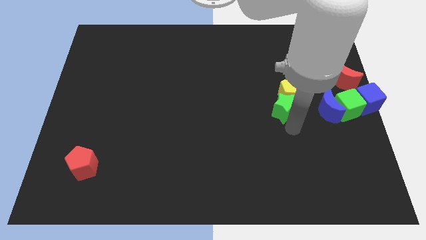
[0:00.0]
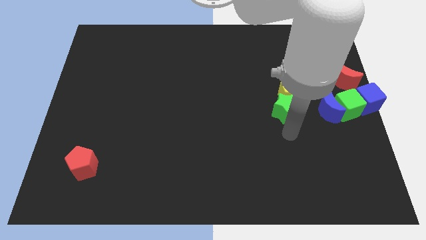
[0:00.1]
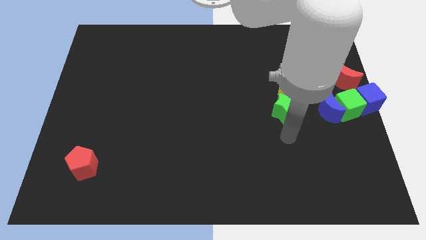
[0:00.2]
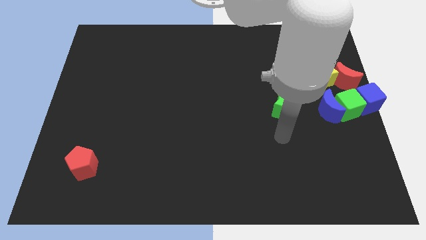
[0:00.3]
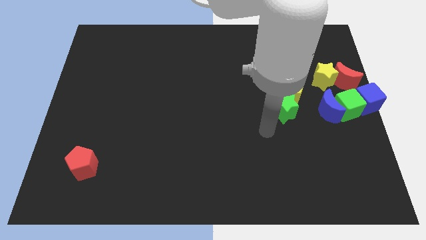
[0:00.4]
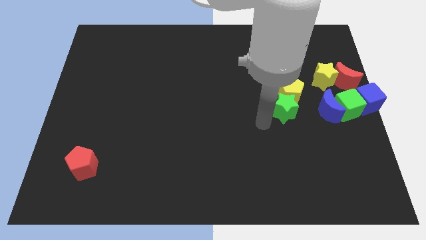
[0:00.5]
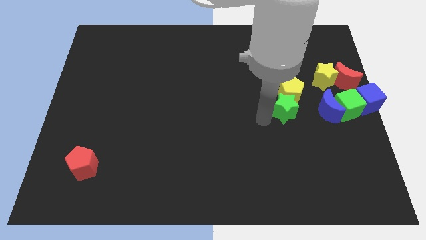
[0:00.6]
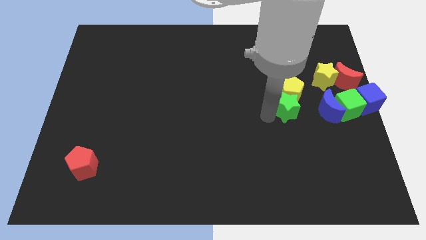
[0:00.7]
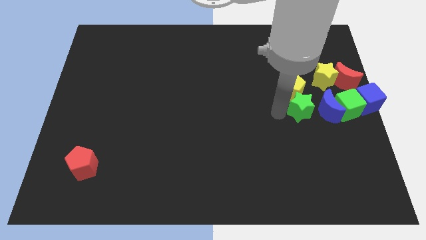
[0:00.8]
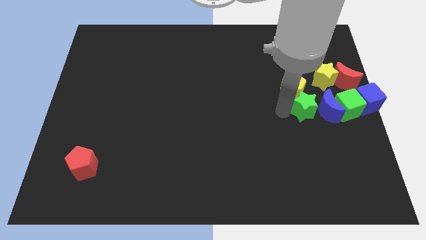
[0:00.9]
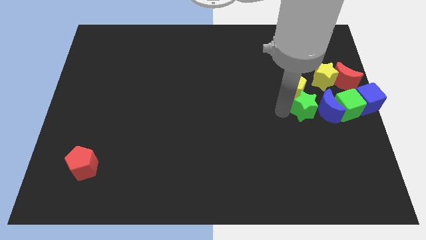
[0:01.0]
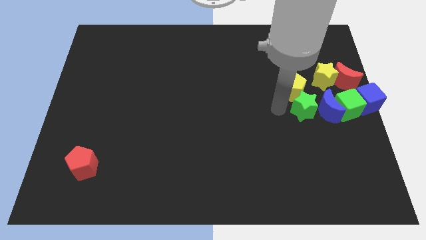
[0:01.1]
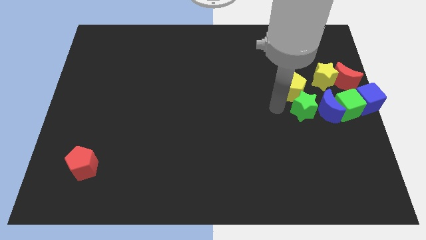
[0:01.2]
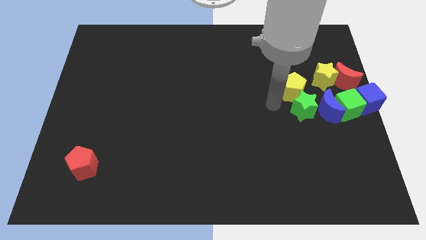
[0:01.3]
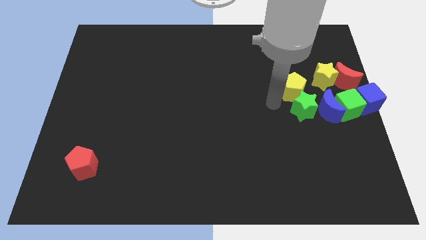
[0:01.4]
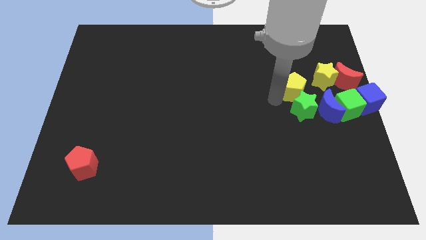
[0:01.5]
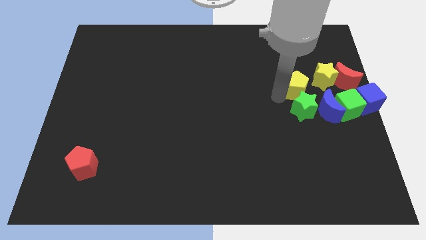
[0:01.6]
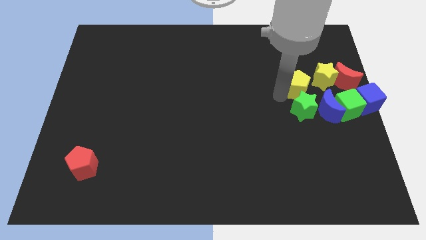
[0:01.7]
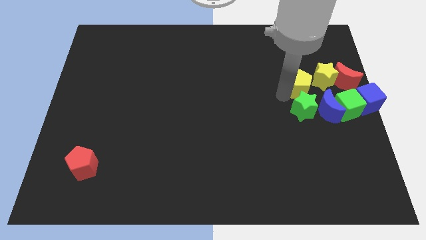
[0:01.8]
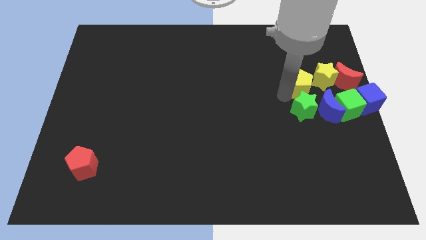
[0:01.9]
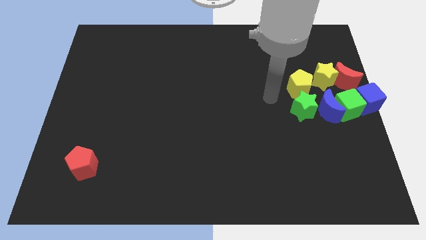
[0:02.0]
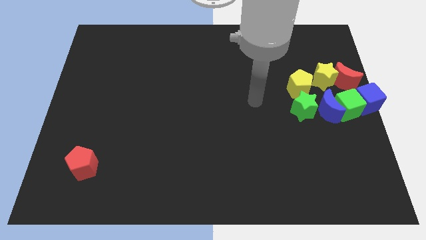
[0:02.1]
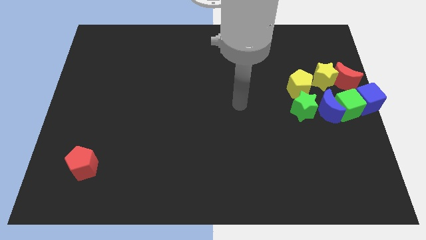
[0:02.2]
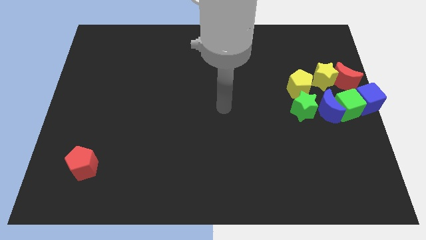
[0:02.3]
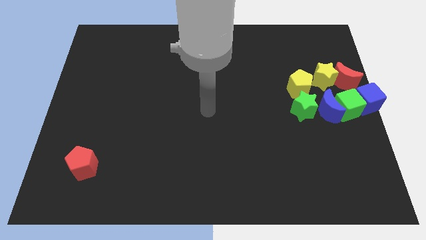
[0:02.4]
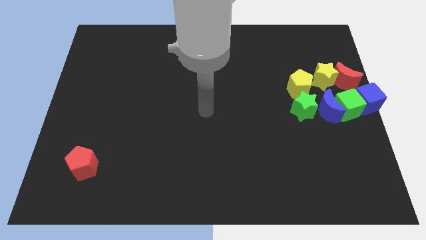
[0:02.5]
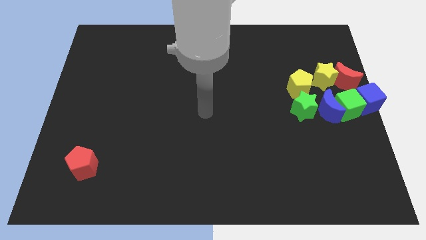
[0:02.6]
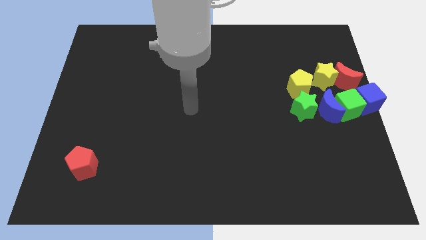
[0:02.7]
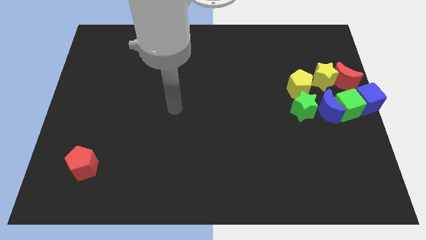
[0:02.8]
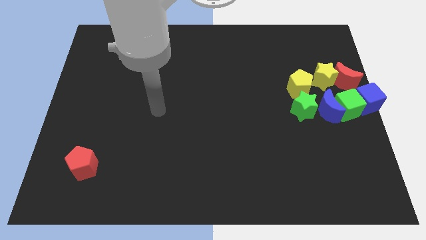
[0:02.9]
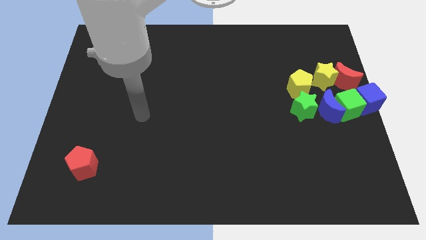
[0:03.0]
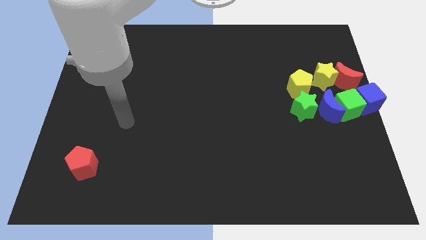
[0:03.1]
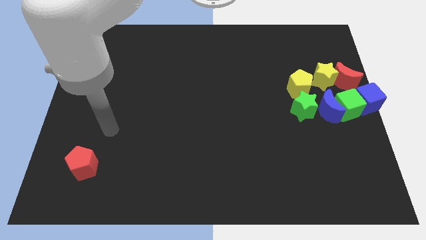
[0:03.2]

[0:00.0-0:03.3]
move green star and the yellow pentagon slightly to the right

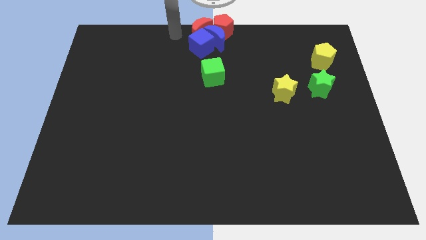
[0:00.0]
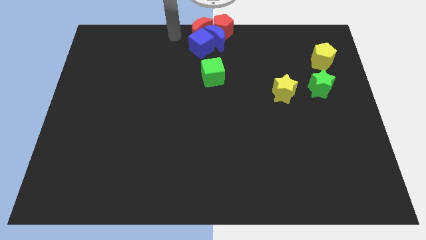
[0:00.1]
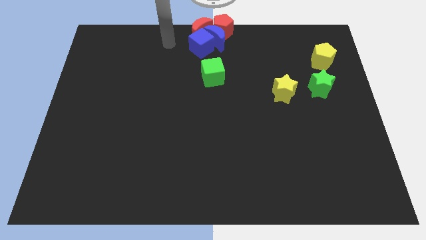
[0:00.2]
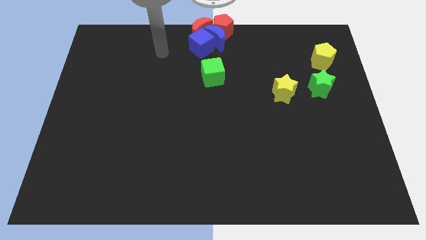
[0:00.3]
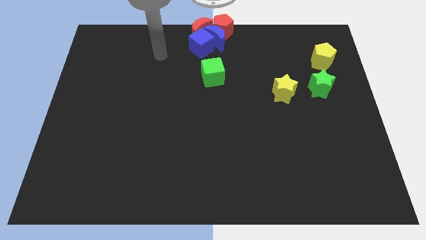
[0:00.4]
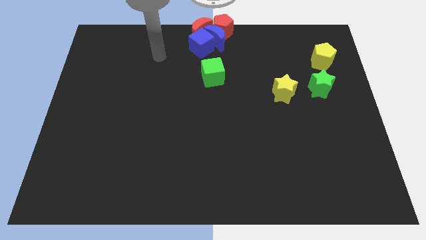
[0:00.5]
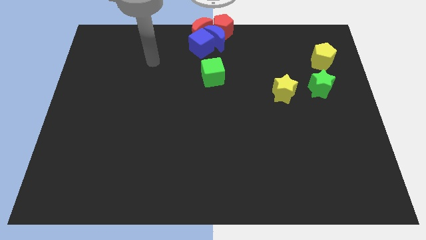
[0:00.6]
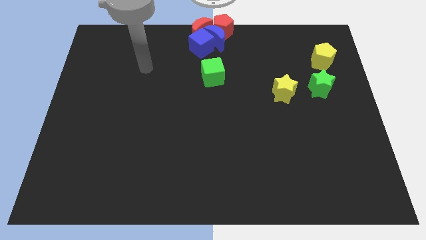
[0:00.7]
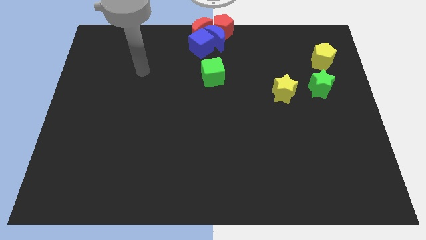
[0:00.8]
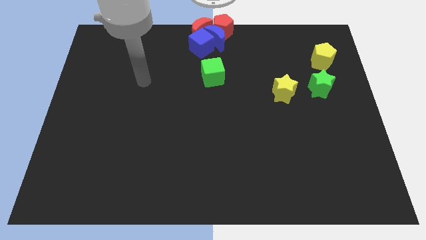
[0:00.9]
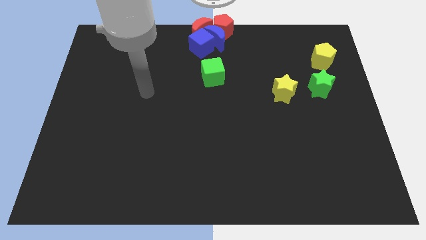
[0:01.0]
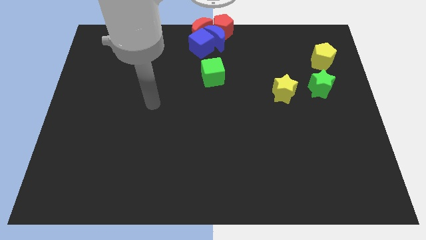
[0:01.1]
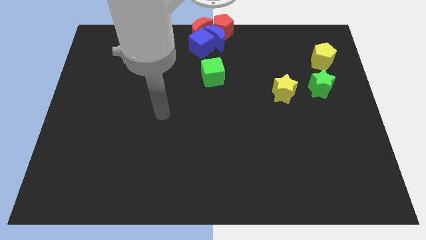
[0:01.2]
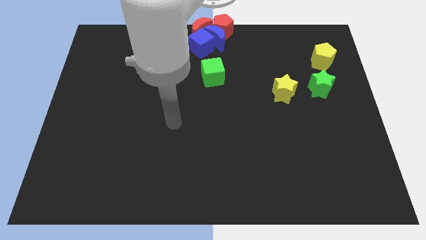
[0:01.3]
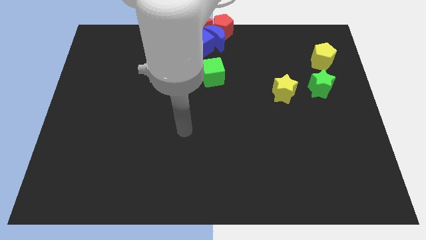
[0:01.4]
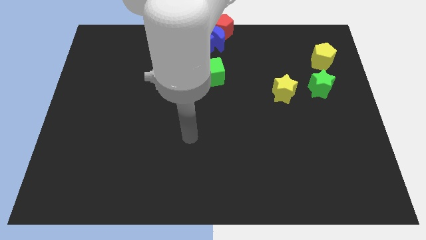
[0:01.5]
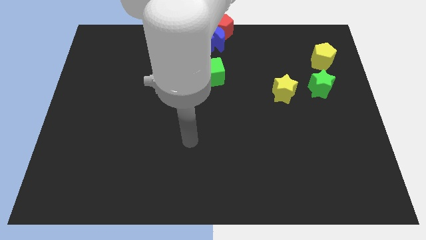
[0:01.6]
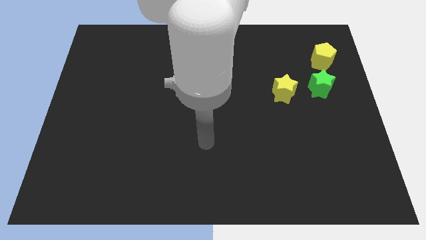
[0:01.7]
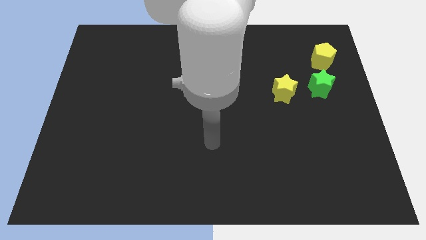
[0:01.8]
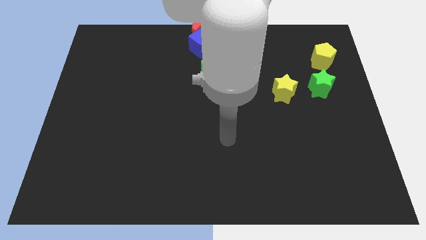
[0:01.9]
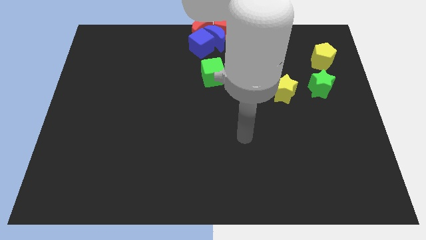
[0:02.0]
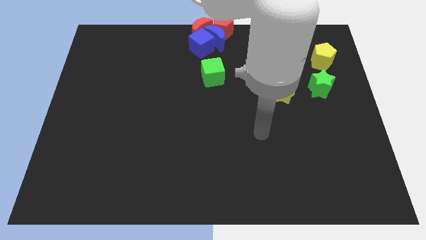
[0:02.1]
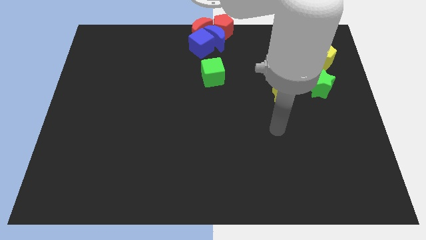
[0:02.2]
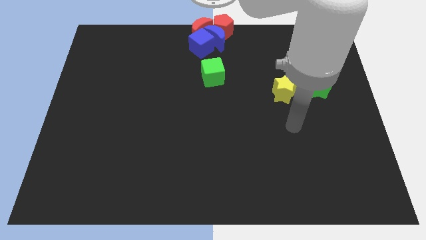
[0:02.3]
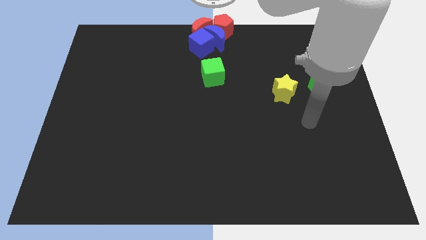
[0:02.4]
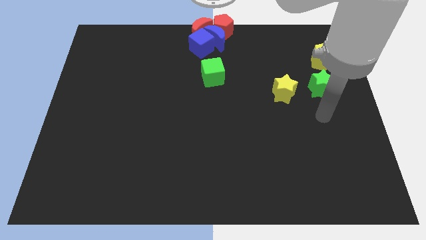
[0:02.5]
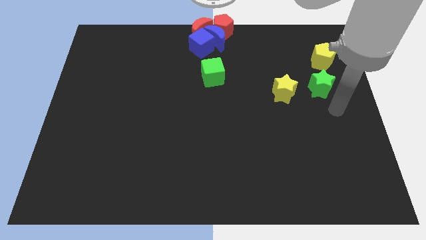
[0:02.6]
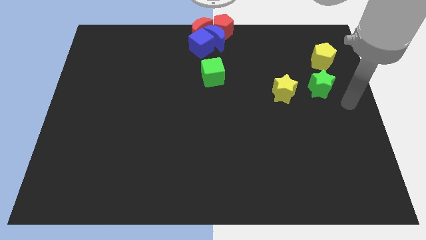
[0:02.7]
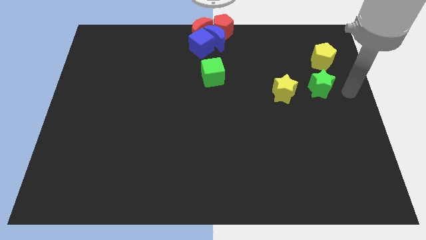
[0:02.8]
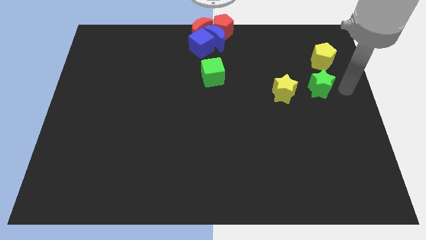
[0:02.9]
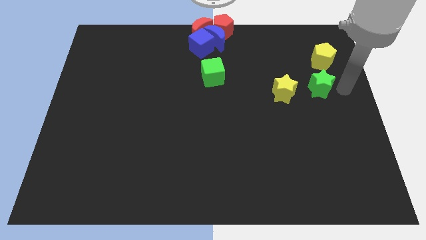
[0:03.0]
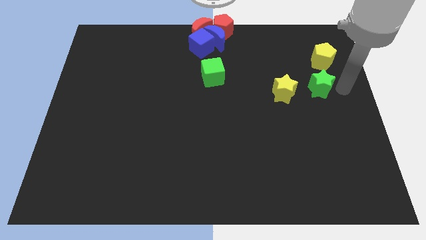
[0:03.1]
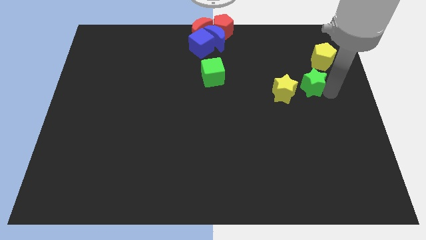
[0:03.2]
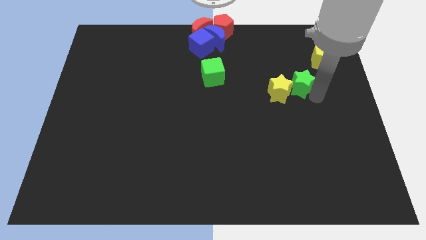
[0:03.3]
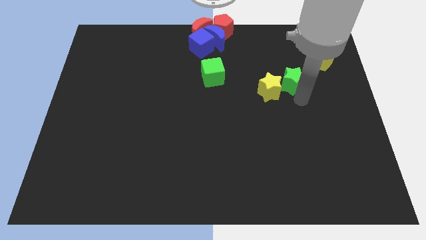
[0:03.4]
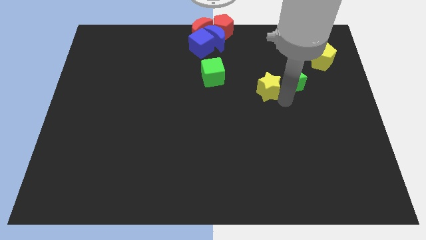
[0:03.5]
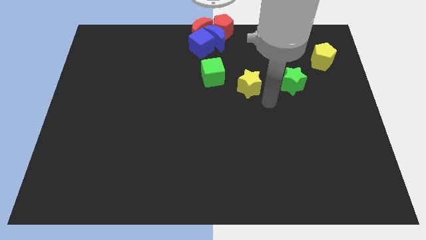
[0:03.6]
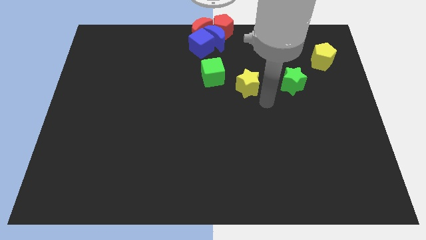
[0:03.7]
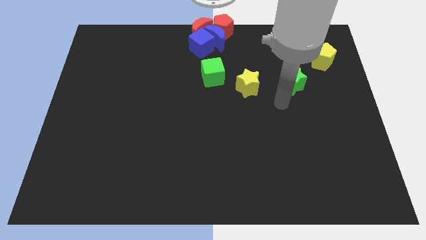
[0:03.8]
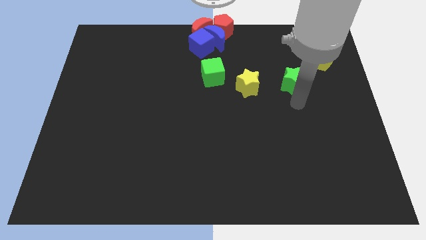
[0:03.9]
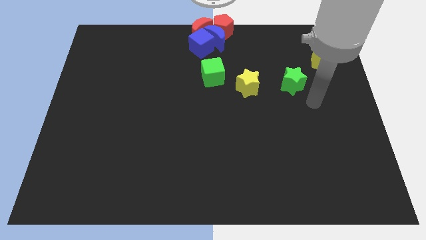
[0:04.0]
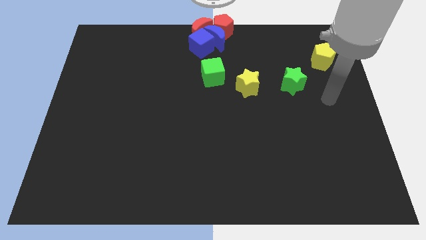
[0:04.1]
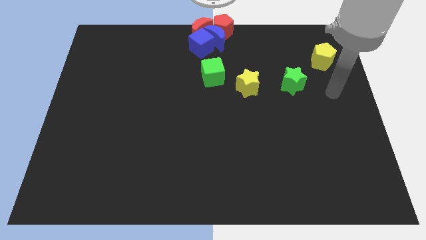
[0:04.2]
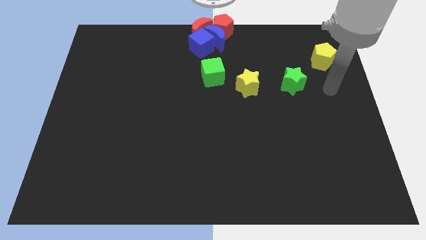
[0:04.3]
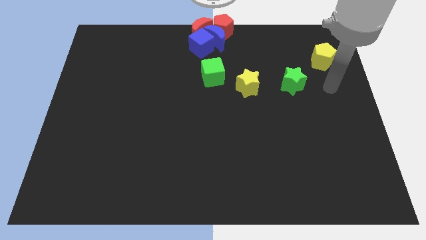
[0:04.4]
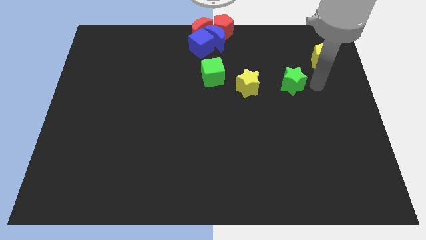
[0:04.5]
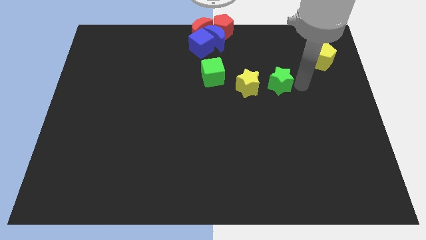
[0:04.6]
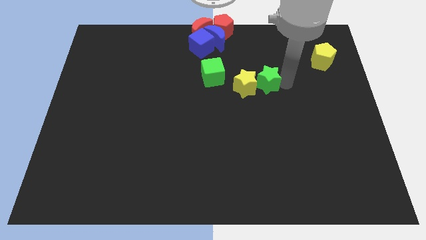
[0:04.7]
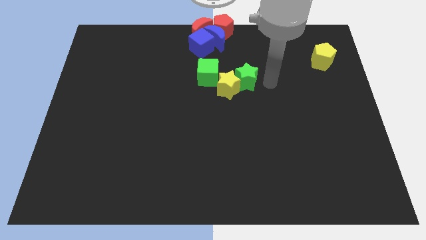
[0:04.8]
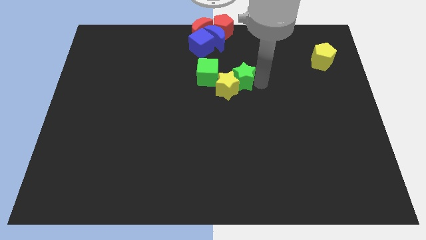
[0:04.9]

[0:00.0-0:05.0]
push the green star into the yellow star

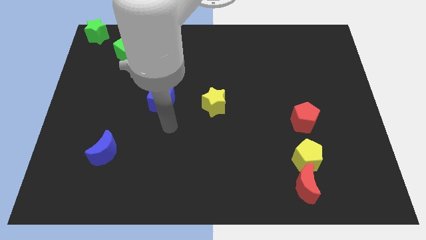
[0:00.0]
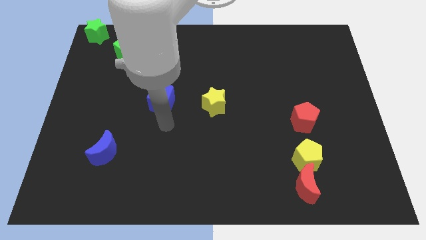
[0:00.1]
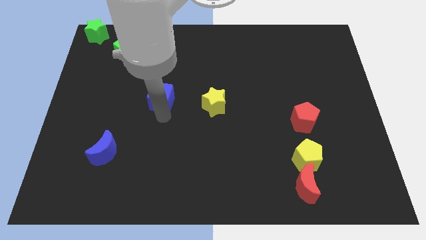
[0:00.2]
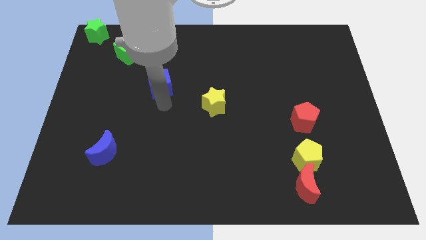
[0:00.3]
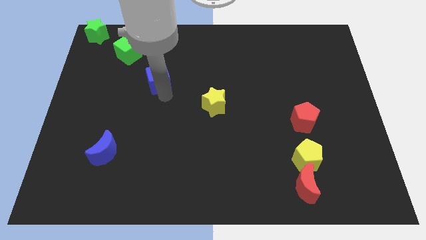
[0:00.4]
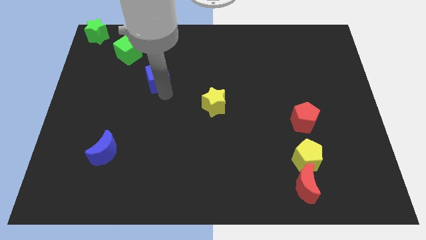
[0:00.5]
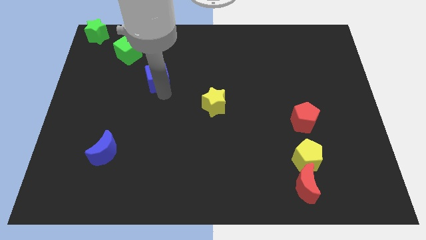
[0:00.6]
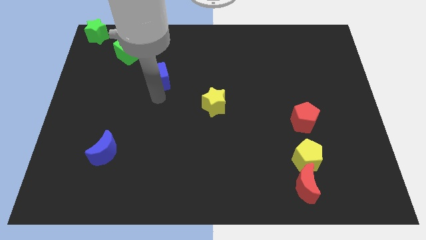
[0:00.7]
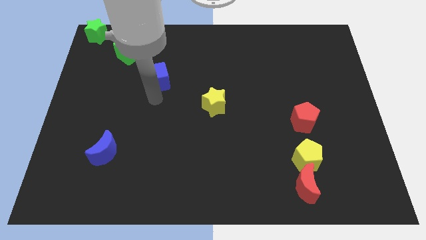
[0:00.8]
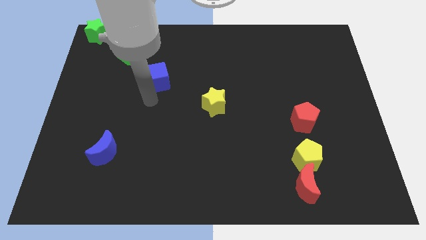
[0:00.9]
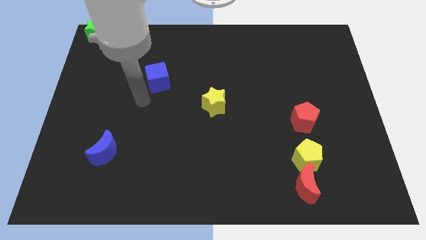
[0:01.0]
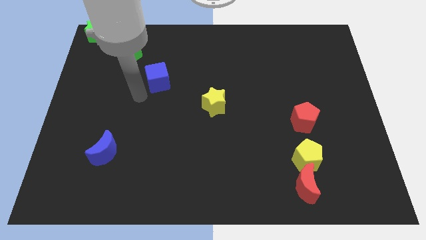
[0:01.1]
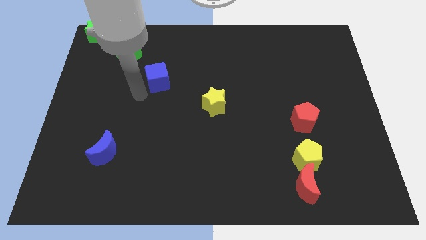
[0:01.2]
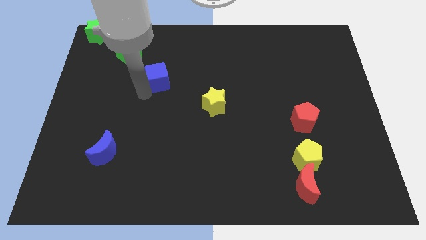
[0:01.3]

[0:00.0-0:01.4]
slightly move the blue cube upwards
